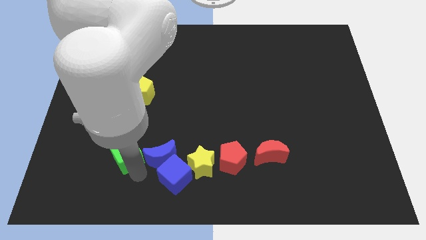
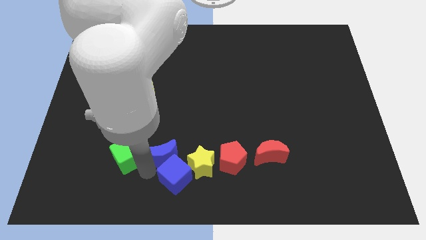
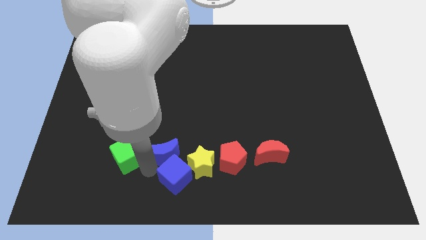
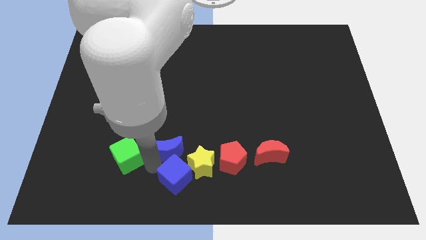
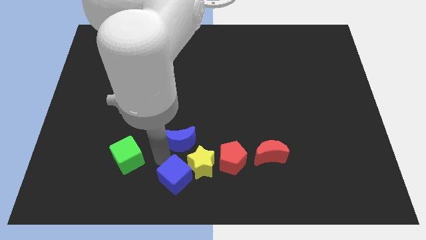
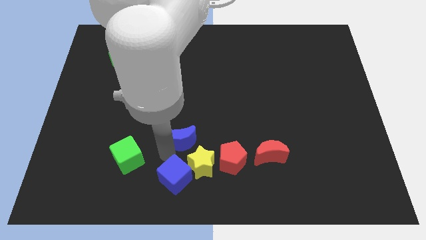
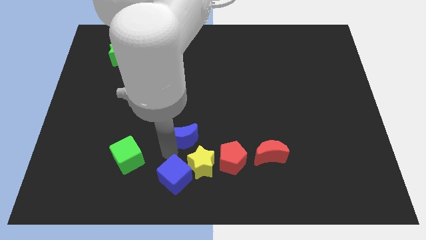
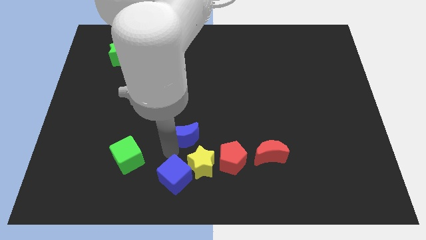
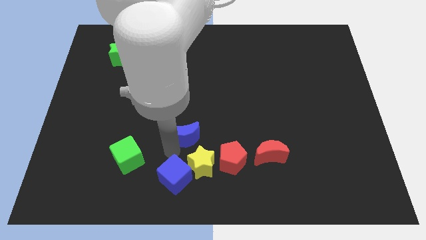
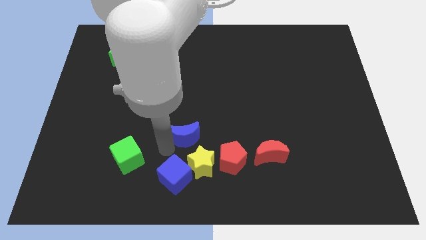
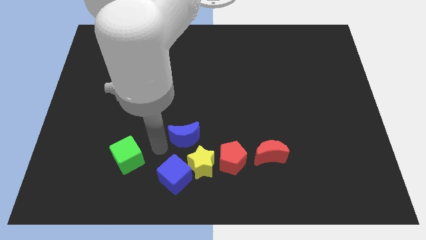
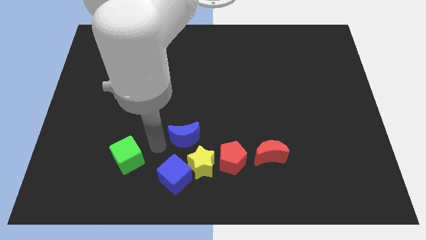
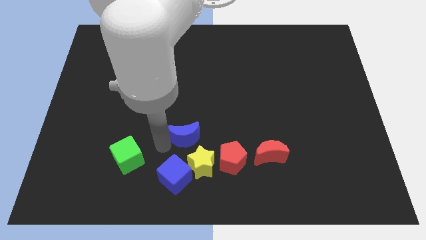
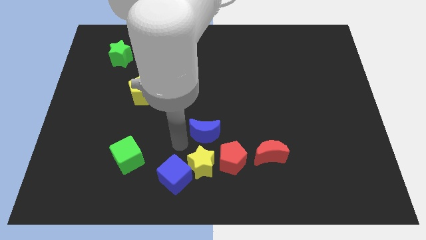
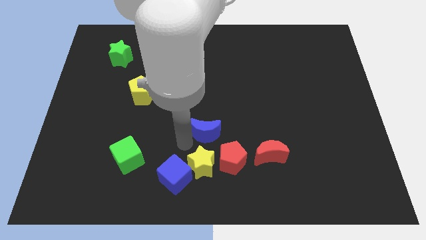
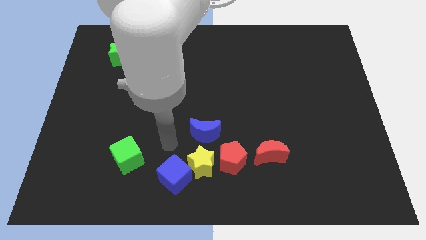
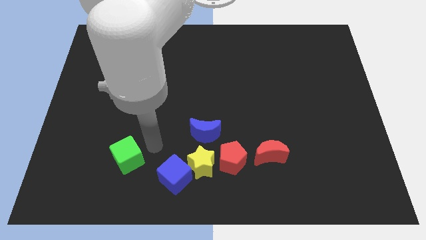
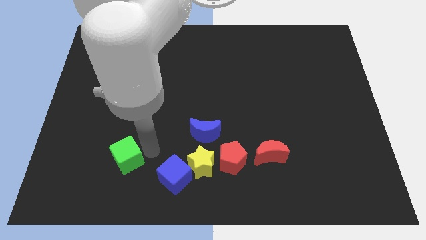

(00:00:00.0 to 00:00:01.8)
separate the blue moon towards top of yellow star

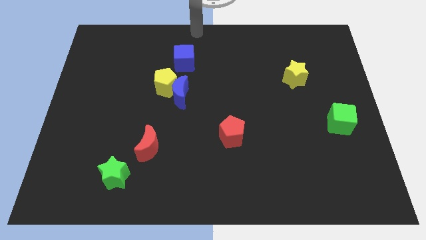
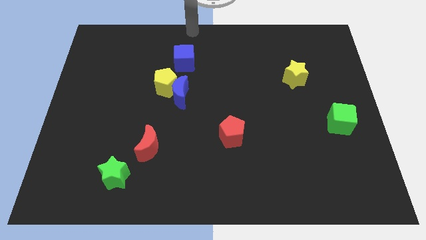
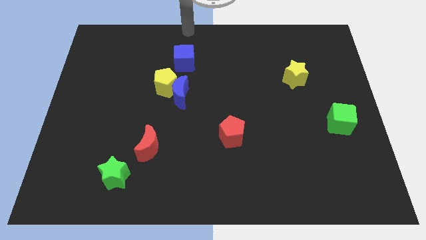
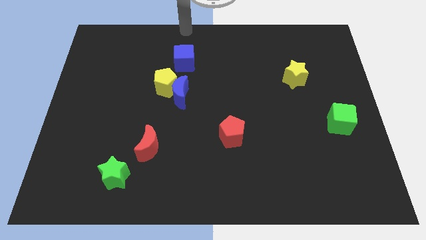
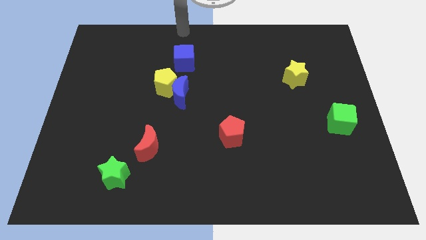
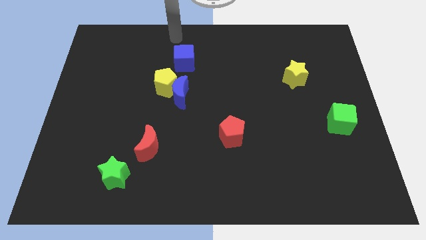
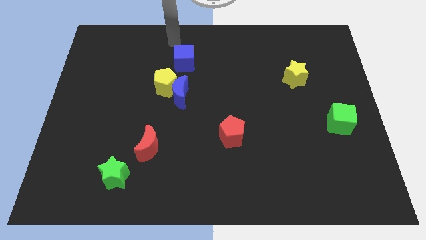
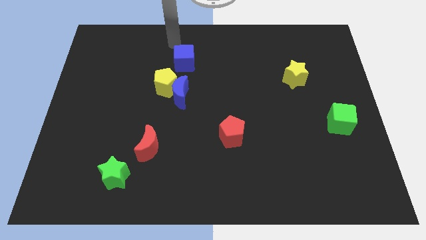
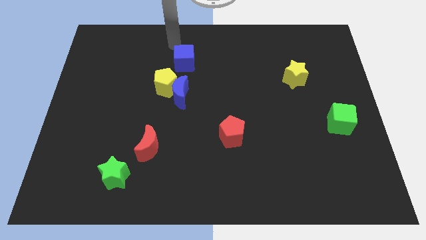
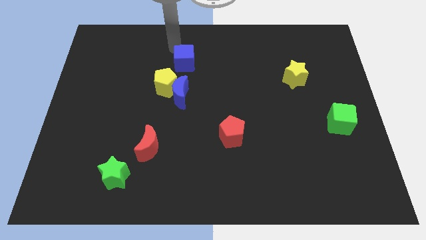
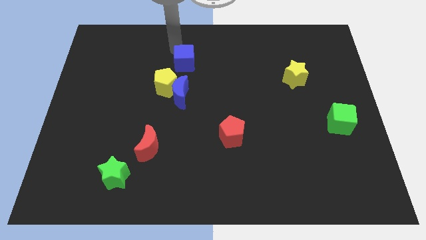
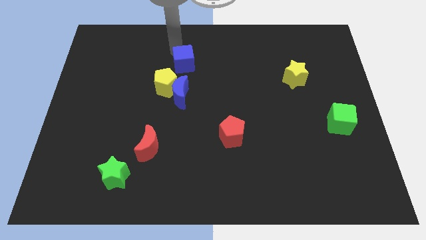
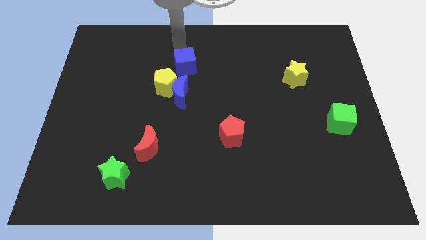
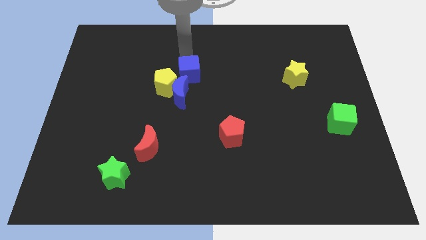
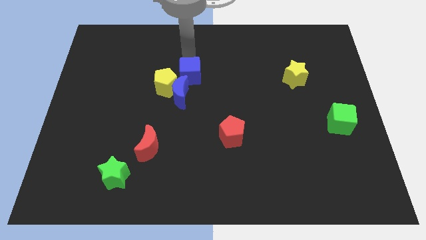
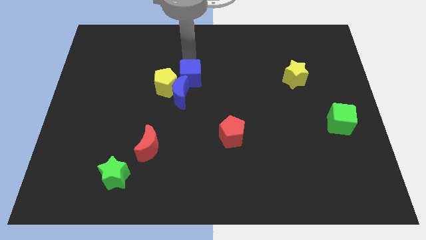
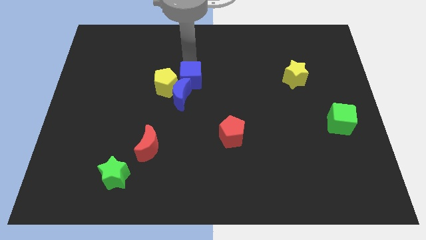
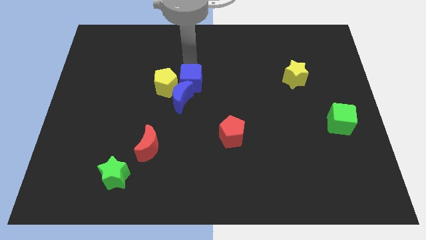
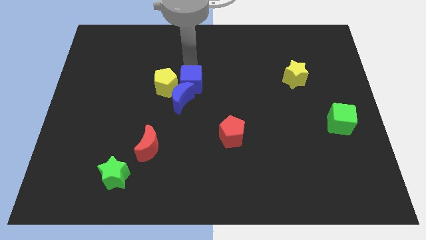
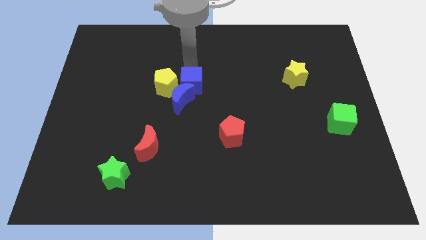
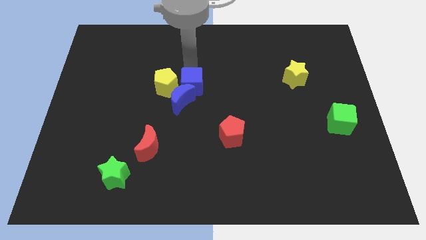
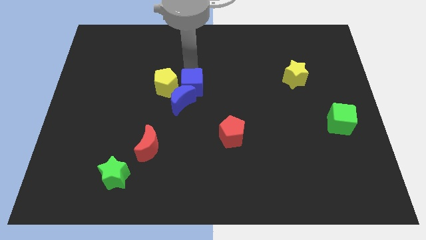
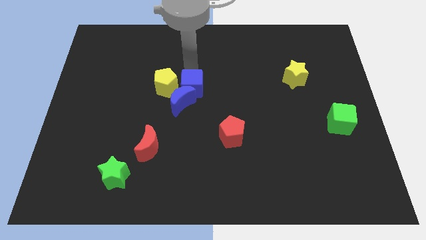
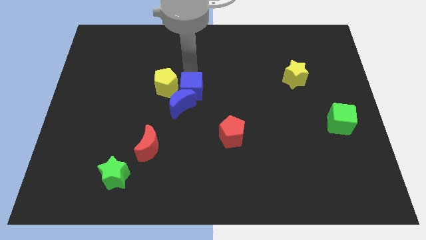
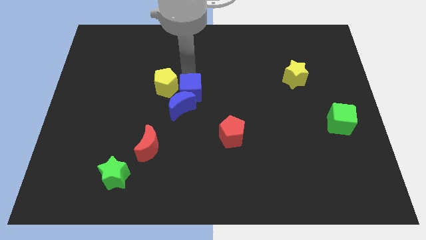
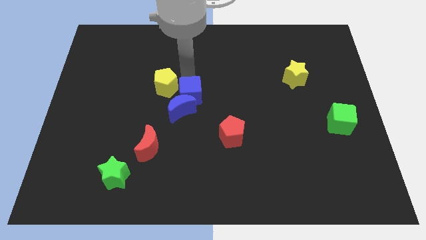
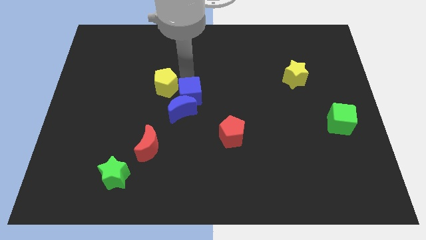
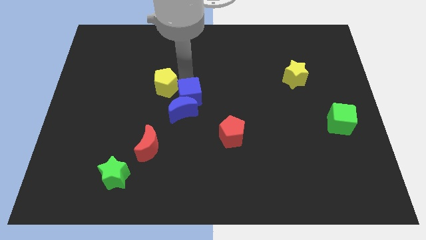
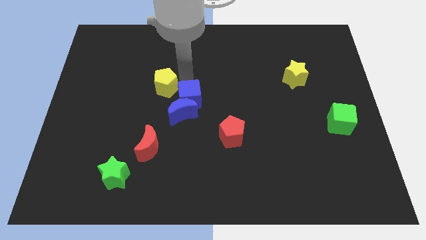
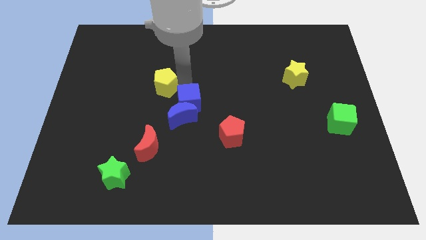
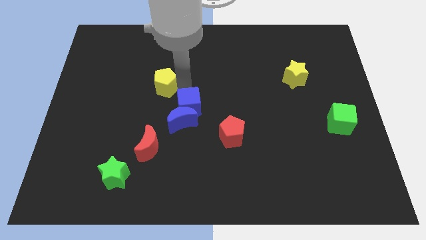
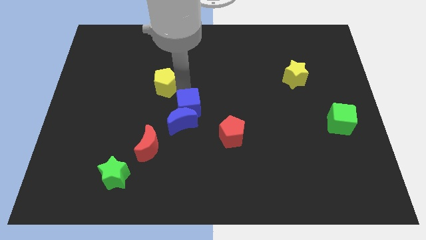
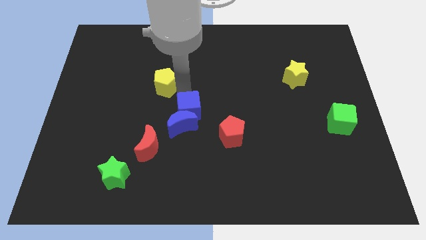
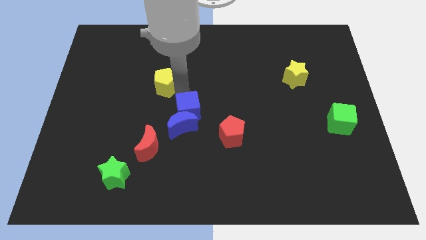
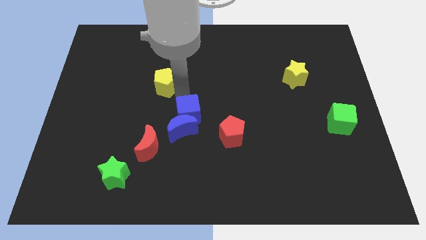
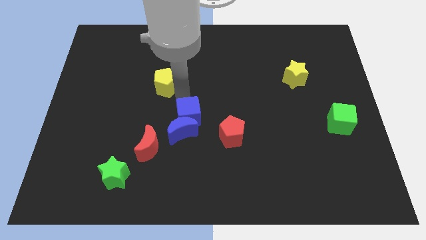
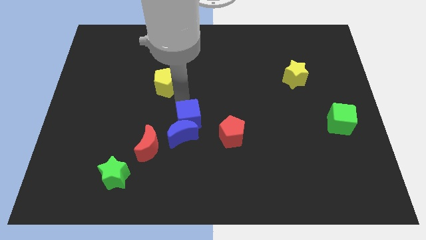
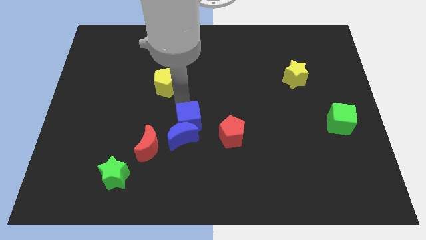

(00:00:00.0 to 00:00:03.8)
push the blue cubes slightly to the bottom

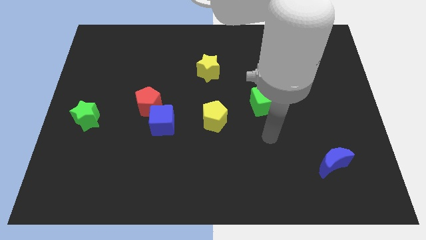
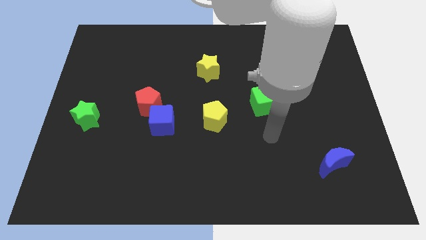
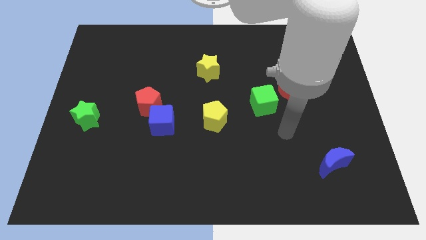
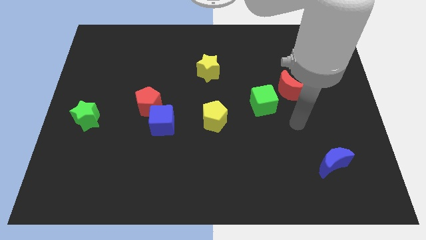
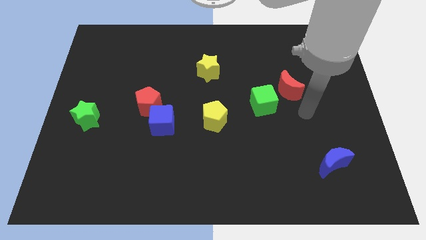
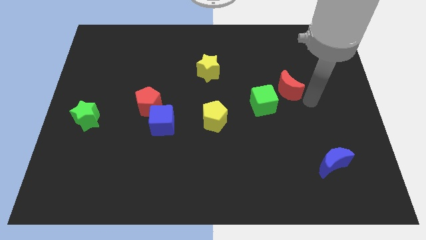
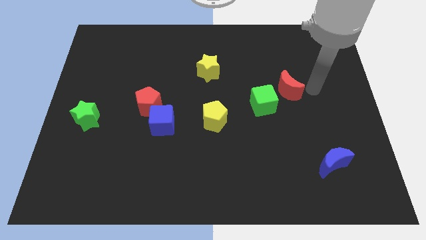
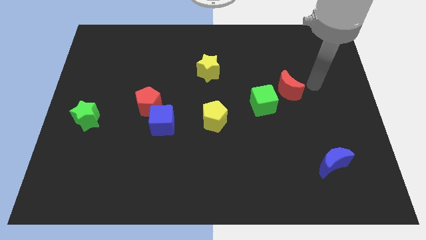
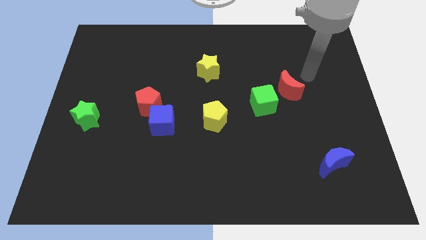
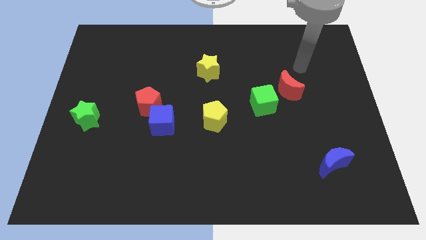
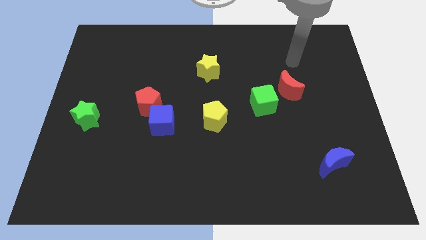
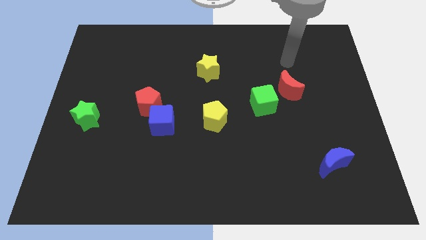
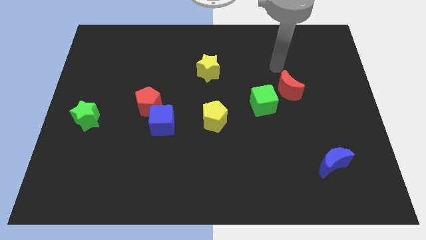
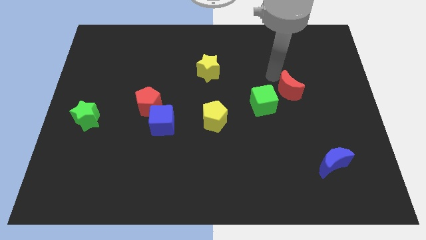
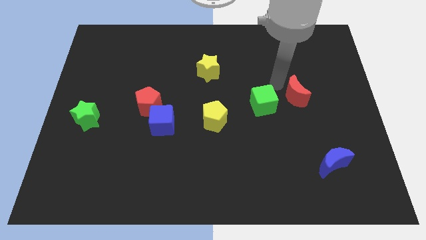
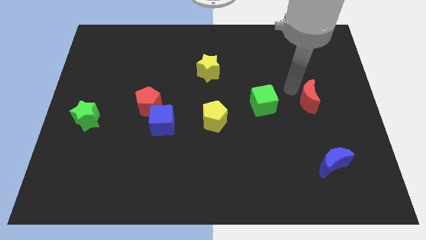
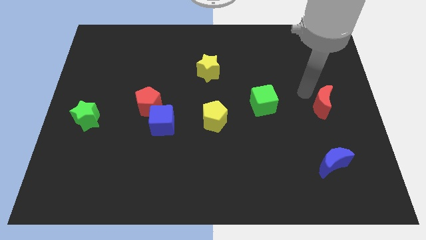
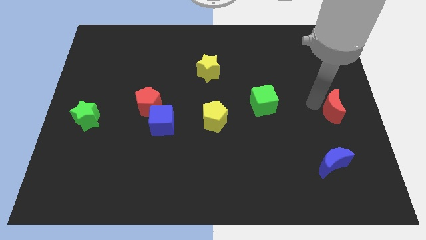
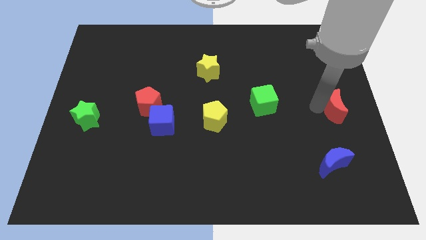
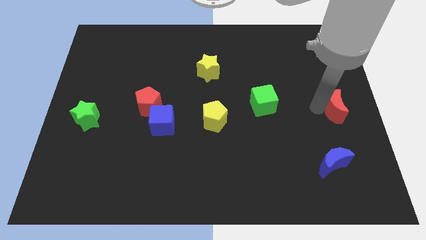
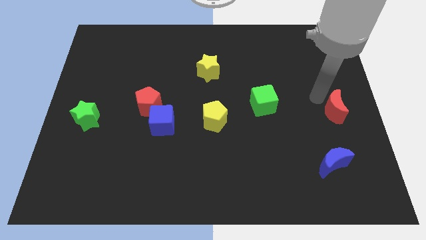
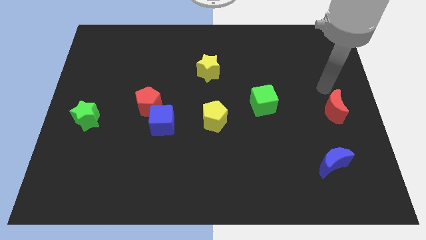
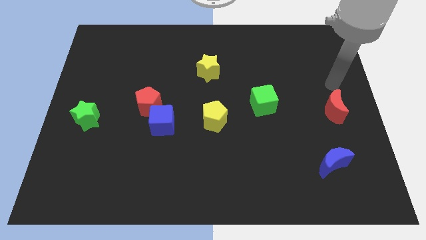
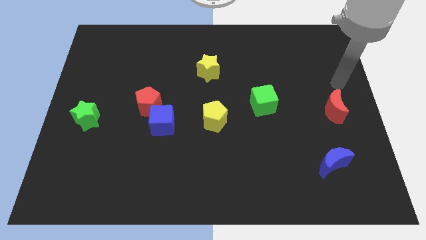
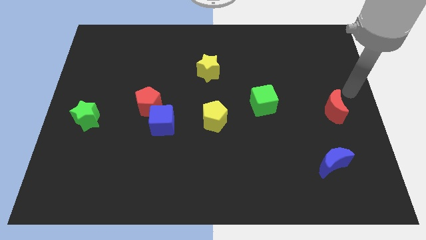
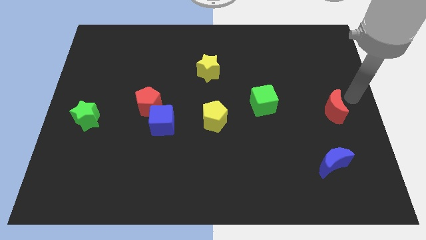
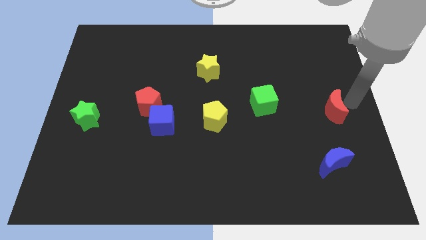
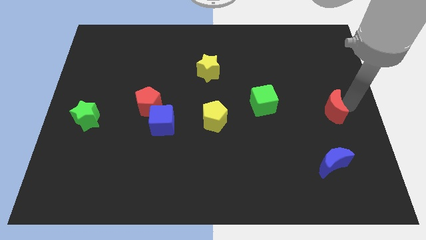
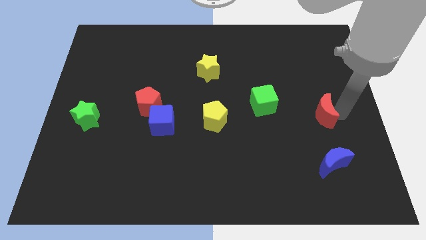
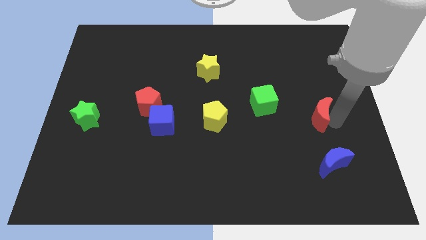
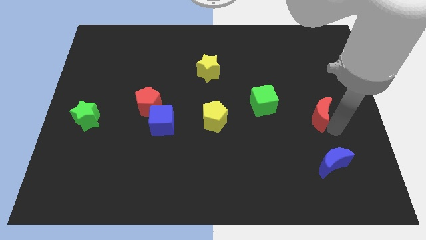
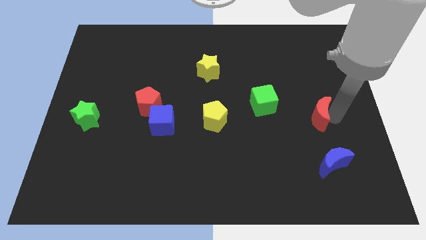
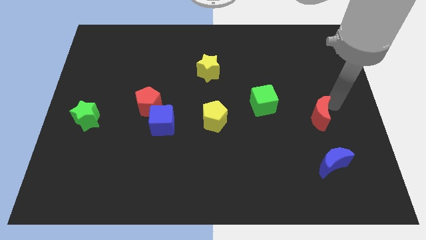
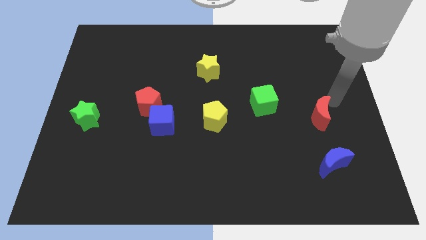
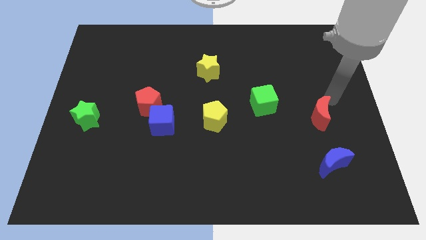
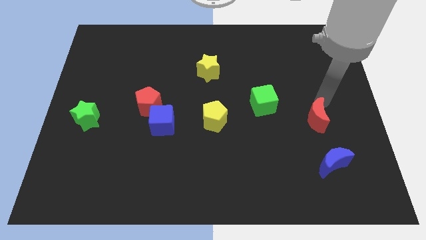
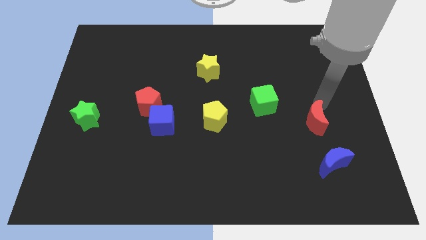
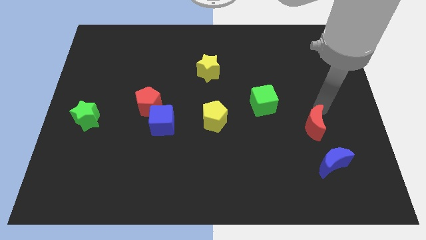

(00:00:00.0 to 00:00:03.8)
drag the red crescent slightly downwards
